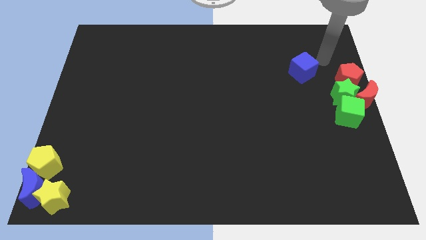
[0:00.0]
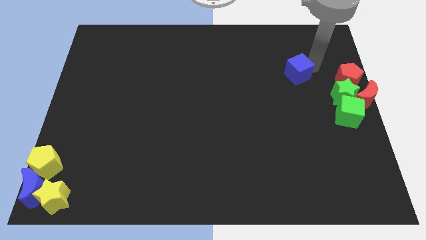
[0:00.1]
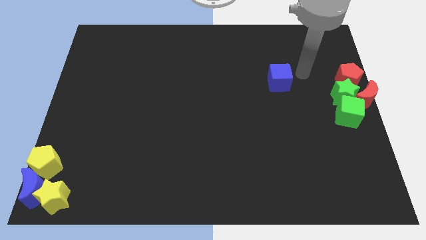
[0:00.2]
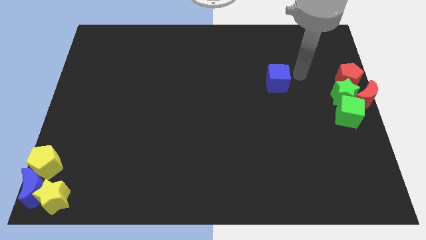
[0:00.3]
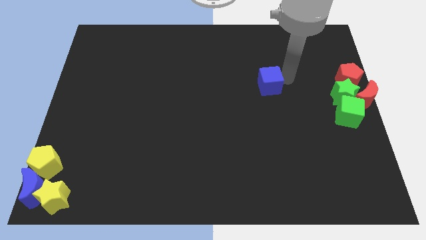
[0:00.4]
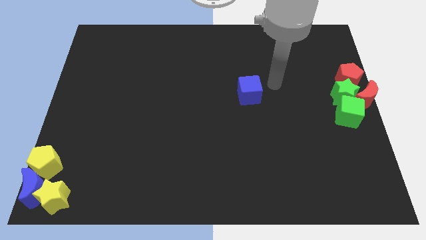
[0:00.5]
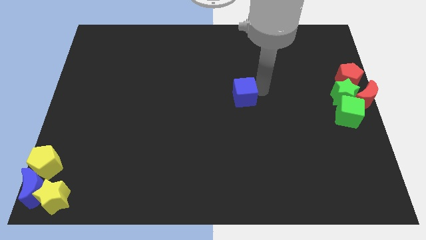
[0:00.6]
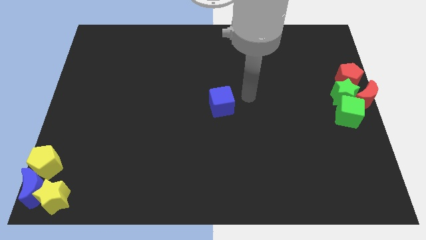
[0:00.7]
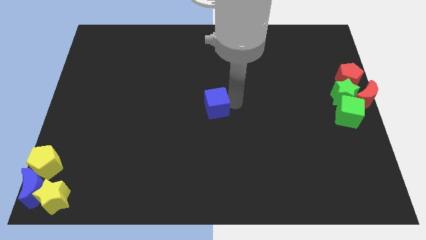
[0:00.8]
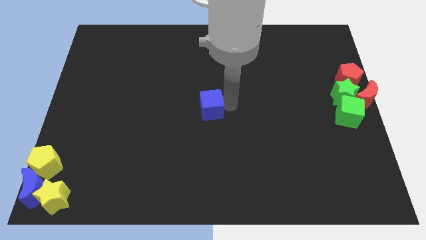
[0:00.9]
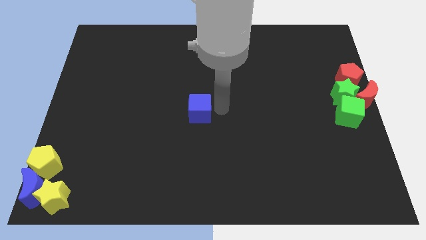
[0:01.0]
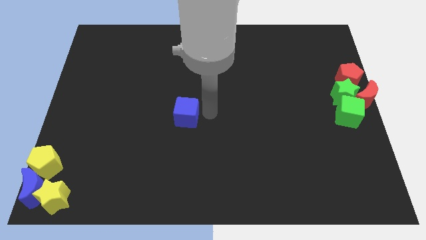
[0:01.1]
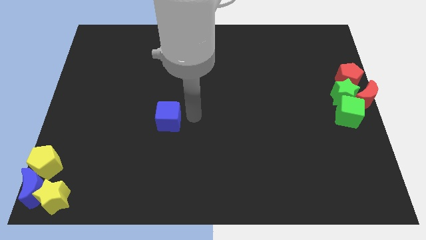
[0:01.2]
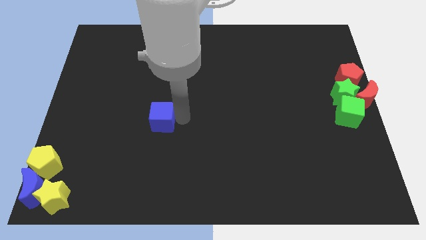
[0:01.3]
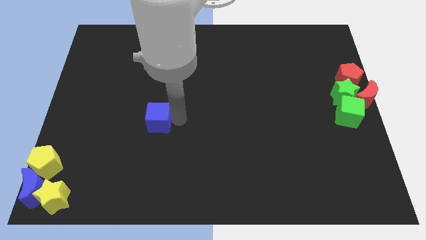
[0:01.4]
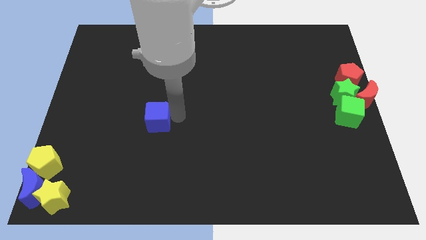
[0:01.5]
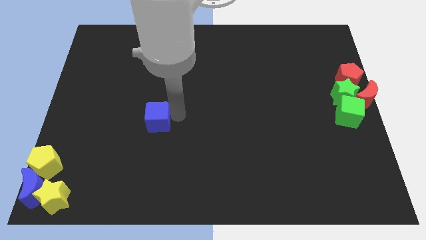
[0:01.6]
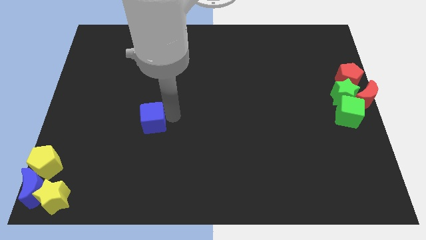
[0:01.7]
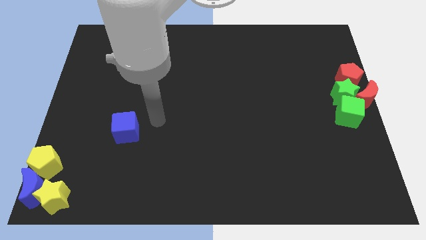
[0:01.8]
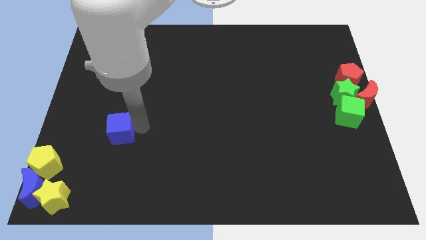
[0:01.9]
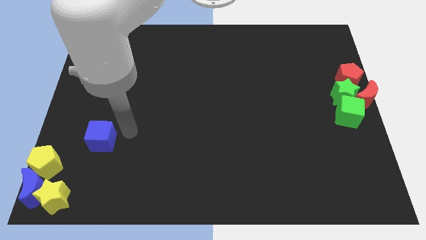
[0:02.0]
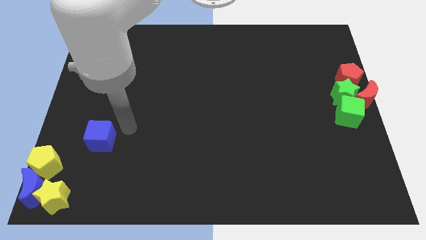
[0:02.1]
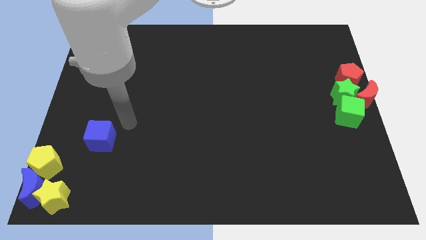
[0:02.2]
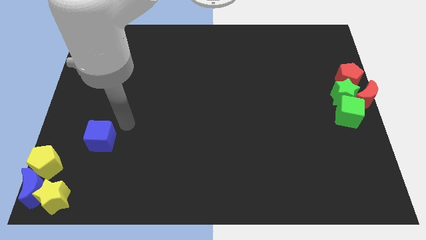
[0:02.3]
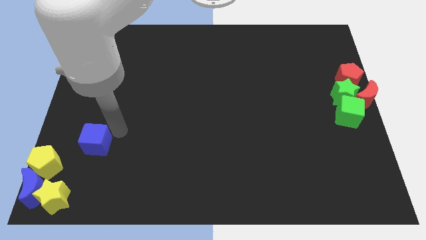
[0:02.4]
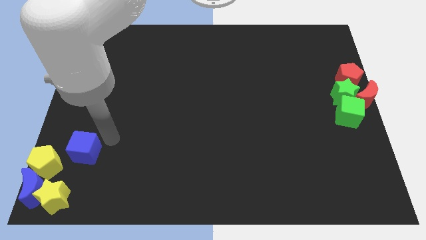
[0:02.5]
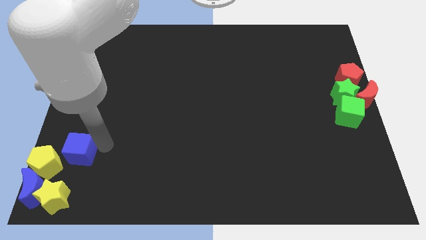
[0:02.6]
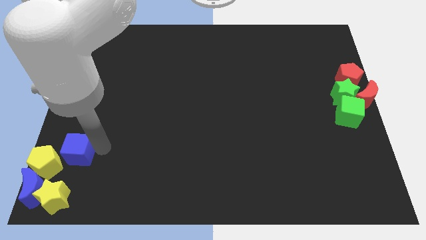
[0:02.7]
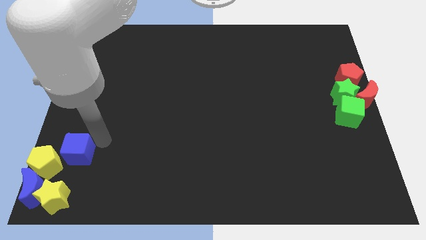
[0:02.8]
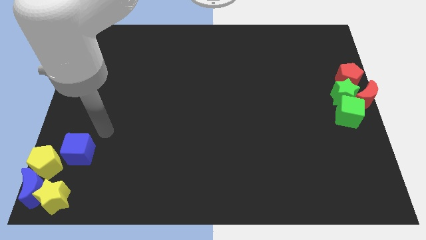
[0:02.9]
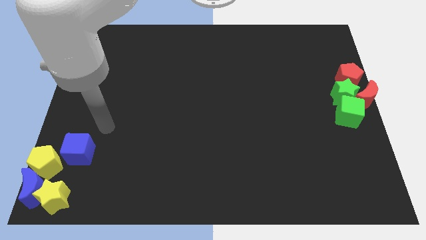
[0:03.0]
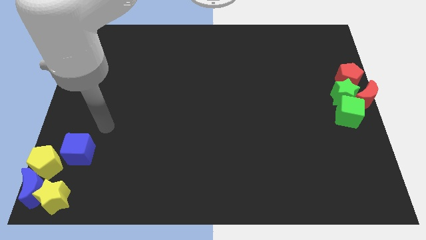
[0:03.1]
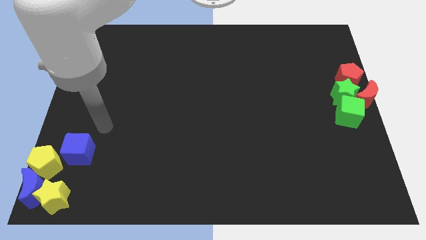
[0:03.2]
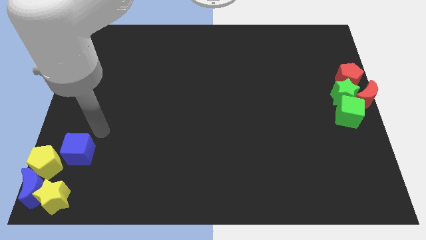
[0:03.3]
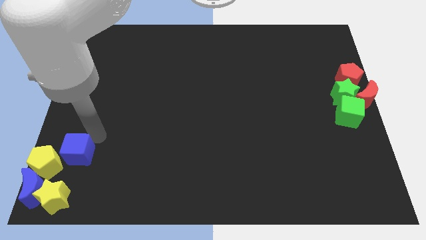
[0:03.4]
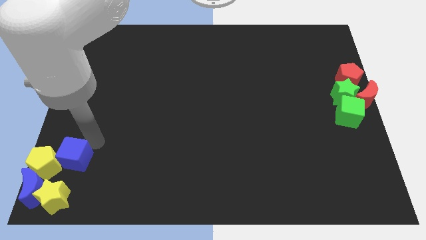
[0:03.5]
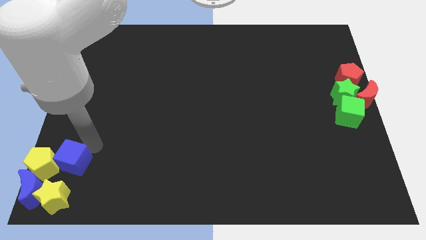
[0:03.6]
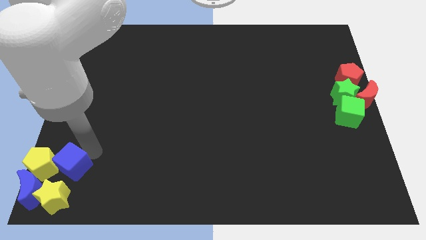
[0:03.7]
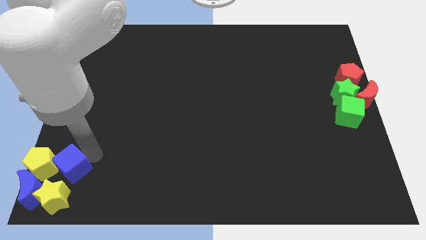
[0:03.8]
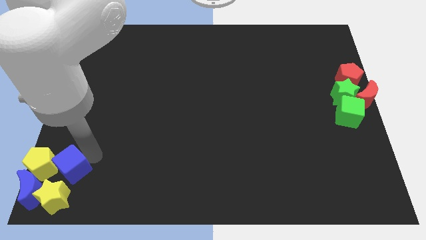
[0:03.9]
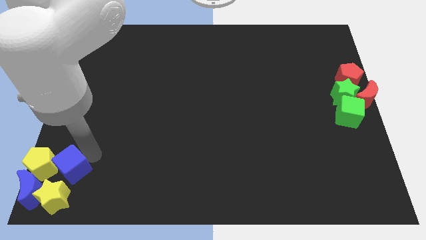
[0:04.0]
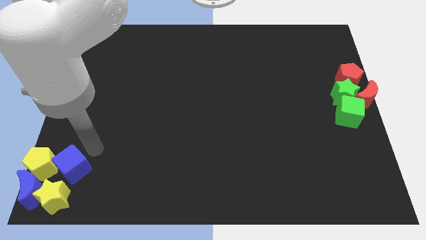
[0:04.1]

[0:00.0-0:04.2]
push the blue cube right to the yellow pentagon

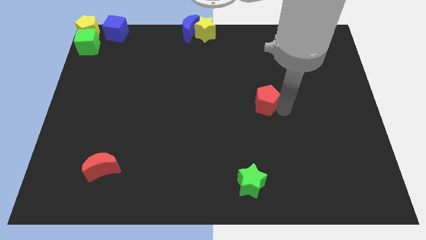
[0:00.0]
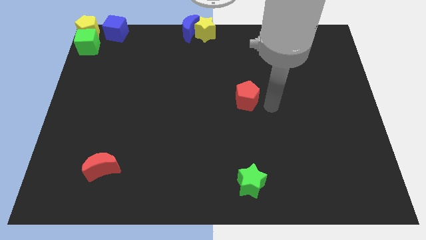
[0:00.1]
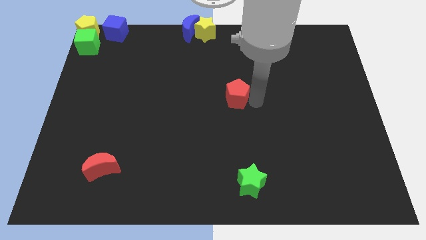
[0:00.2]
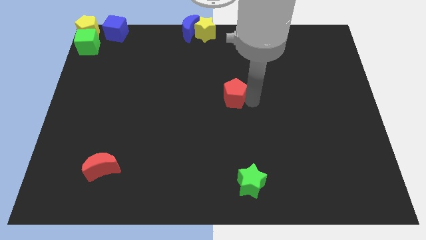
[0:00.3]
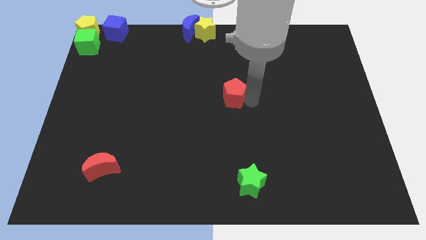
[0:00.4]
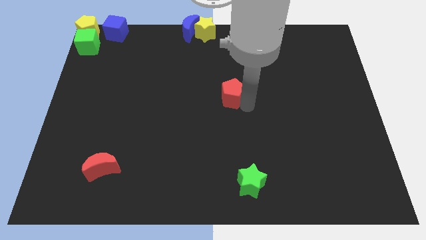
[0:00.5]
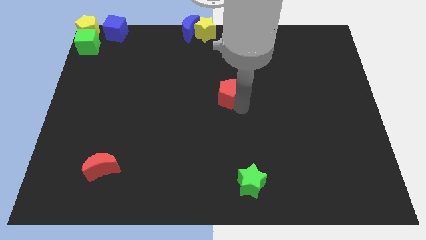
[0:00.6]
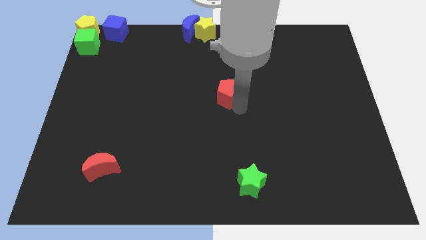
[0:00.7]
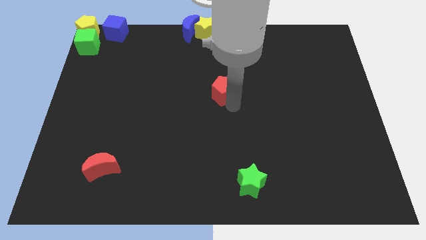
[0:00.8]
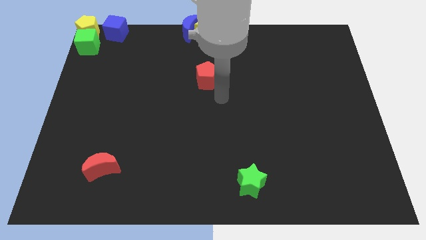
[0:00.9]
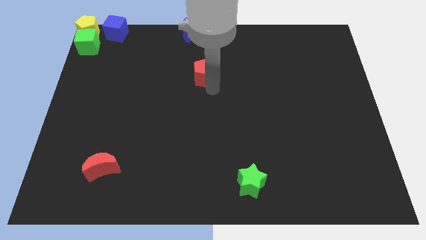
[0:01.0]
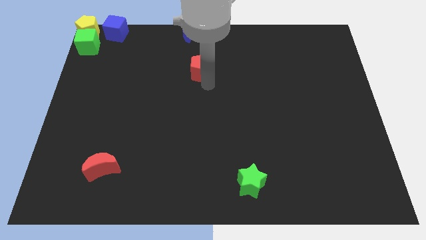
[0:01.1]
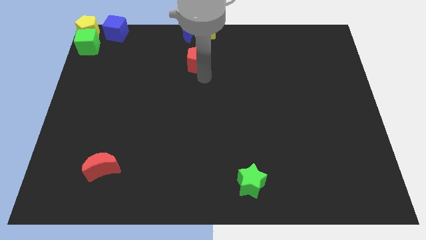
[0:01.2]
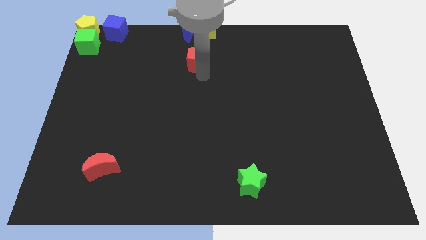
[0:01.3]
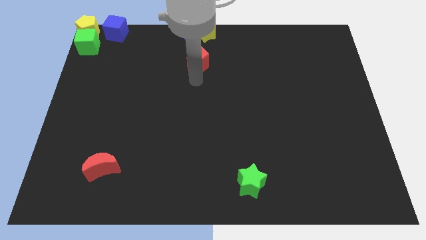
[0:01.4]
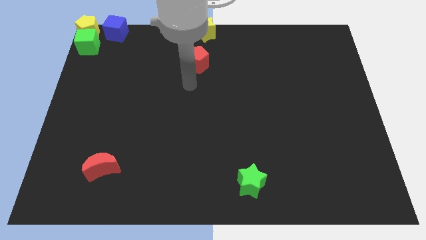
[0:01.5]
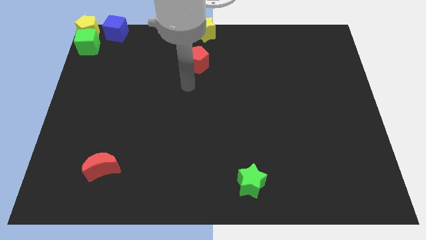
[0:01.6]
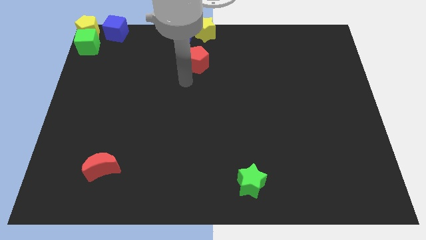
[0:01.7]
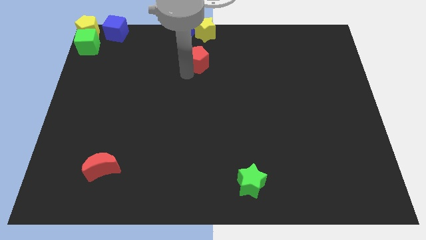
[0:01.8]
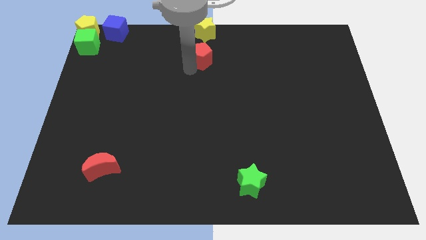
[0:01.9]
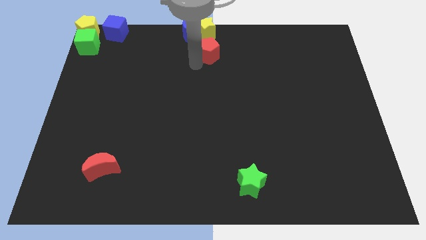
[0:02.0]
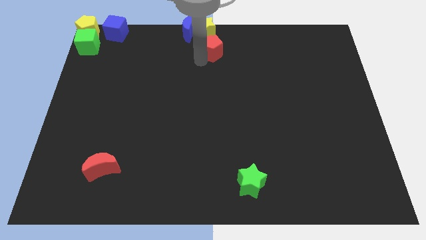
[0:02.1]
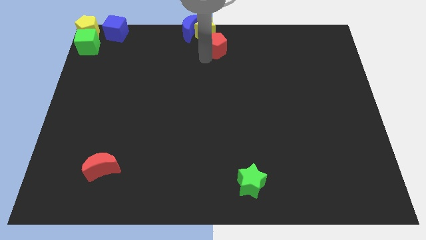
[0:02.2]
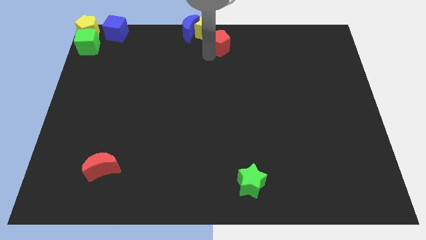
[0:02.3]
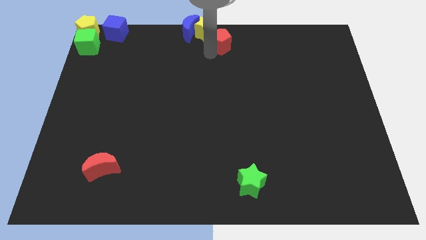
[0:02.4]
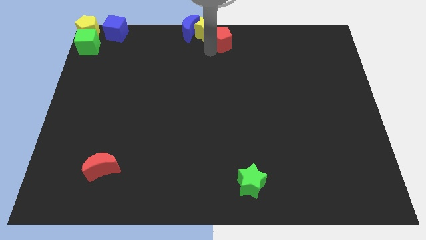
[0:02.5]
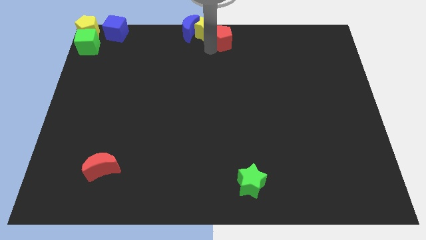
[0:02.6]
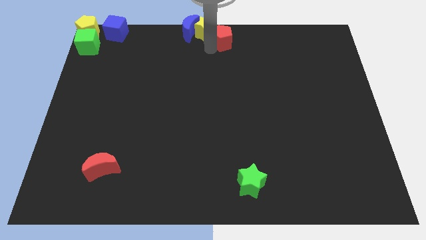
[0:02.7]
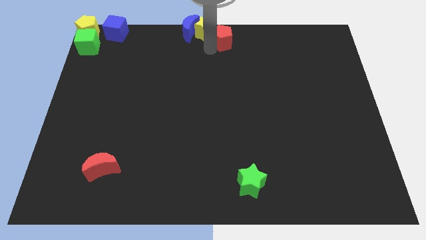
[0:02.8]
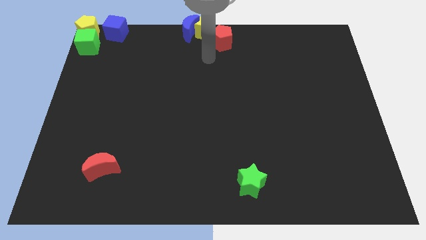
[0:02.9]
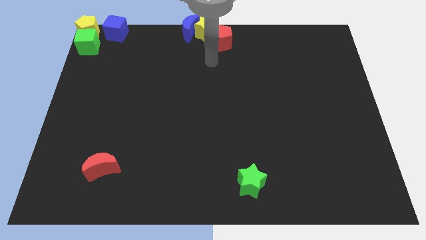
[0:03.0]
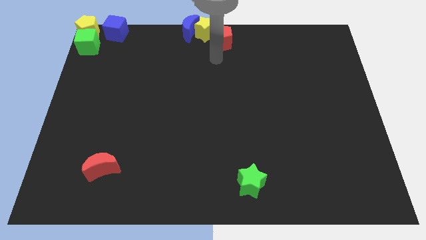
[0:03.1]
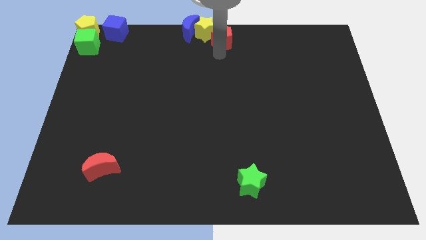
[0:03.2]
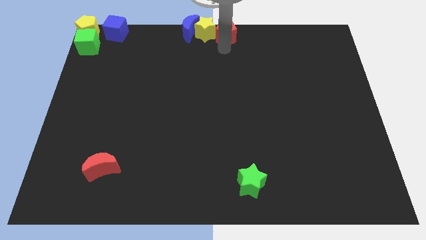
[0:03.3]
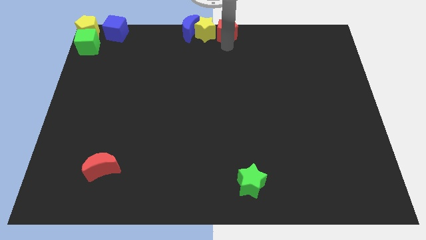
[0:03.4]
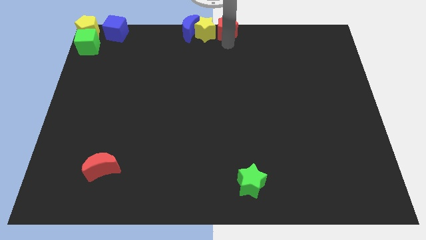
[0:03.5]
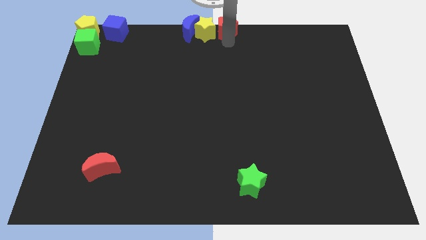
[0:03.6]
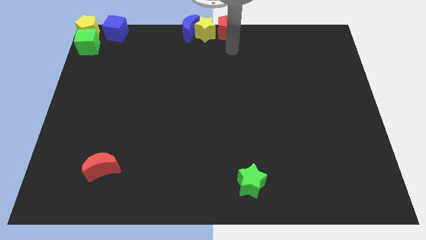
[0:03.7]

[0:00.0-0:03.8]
slide the red pentagon parallel right to th yellow star

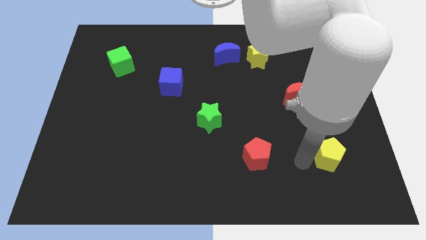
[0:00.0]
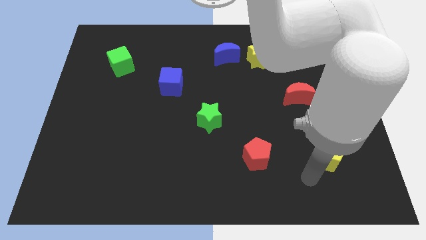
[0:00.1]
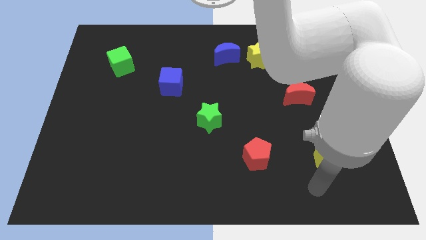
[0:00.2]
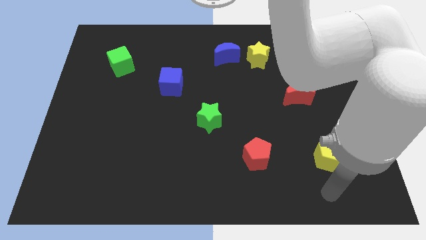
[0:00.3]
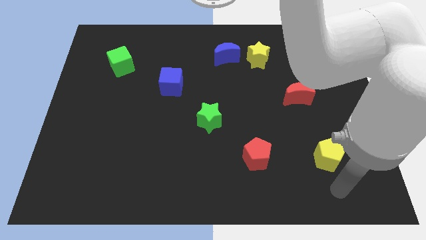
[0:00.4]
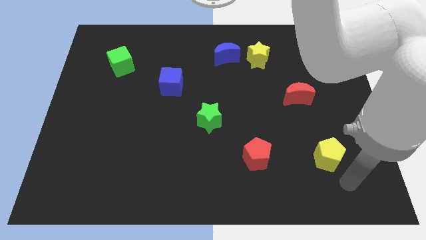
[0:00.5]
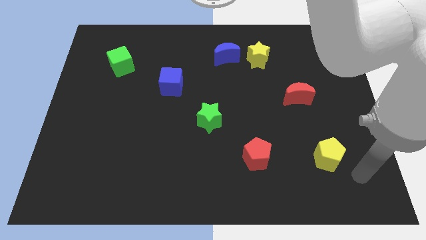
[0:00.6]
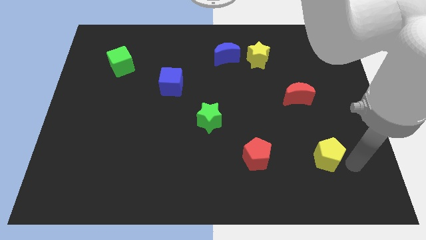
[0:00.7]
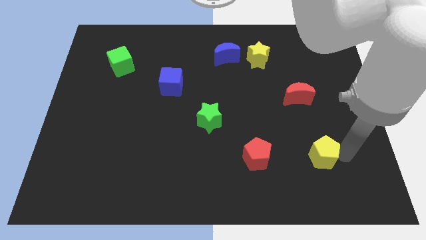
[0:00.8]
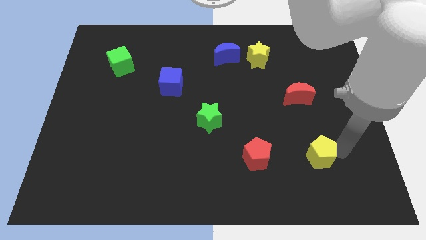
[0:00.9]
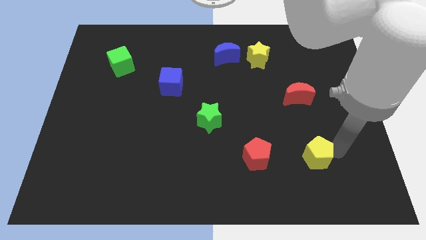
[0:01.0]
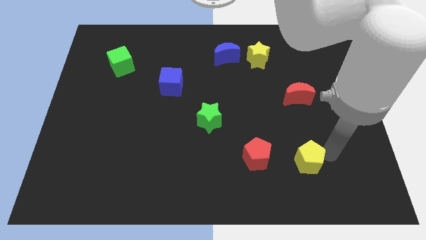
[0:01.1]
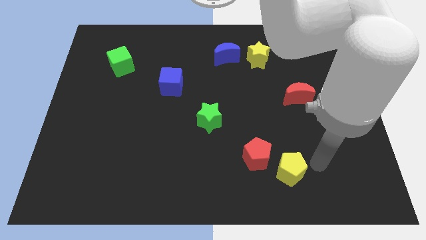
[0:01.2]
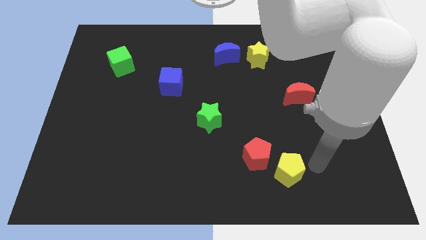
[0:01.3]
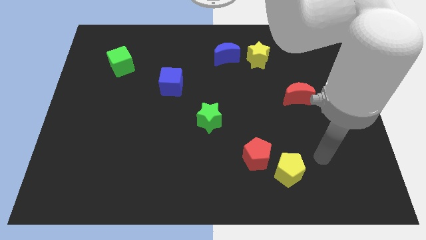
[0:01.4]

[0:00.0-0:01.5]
slide the yellow pentagon towards the red pentagon
